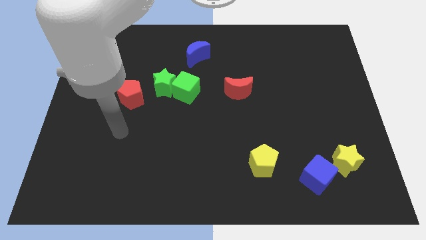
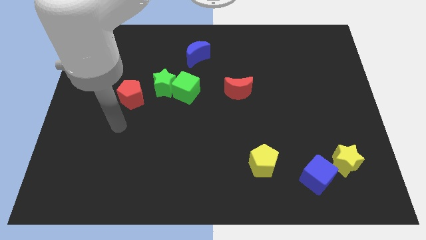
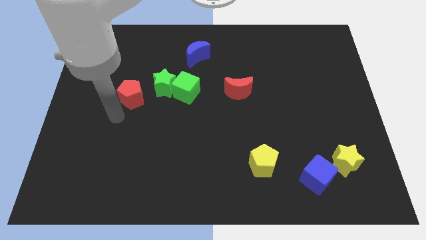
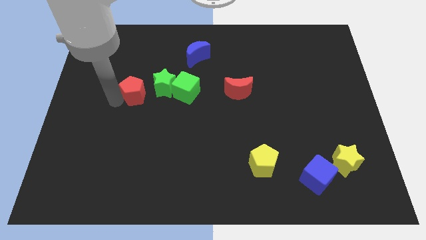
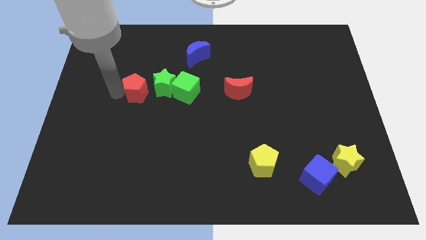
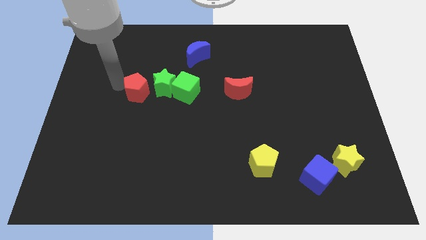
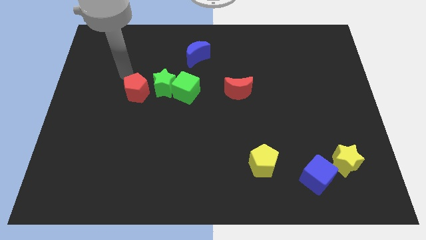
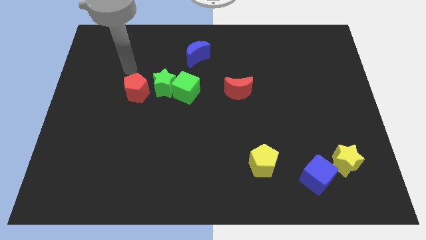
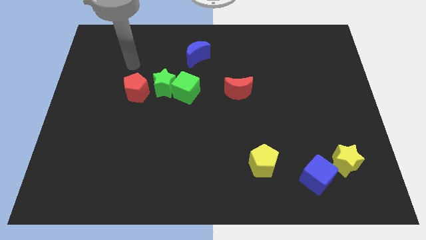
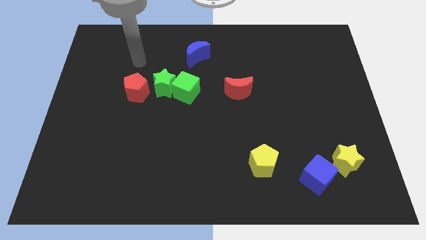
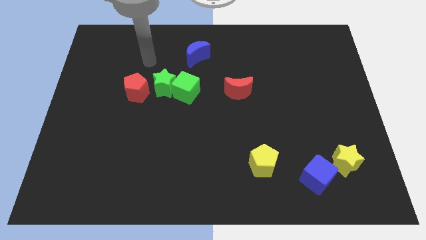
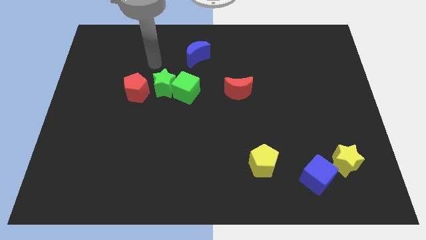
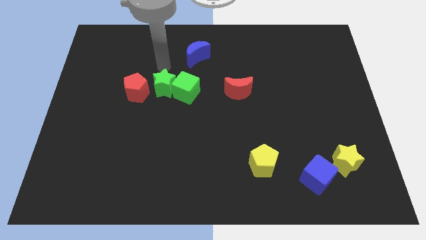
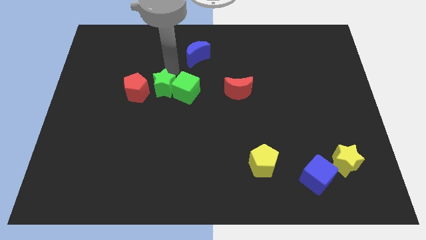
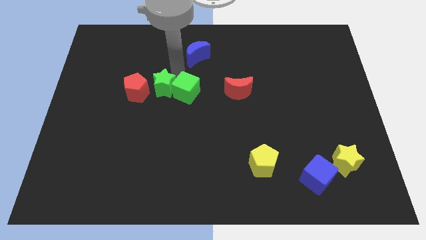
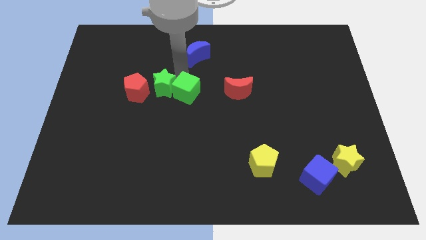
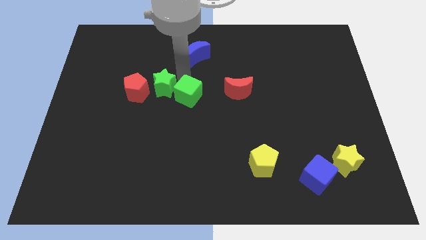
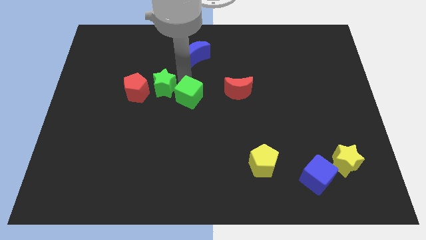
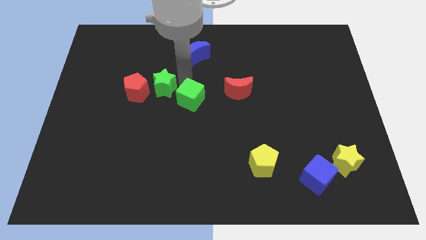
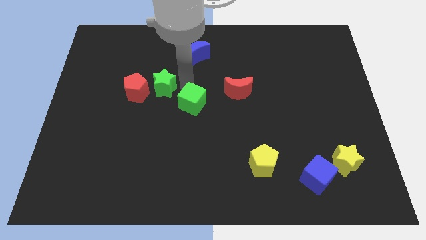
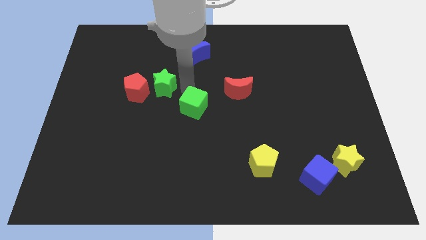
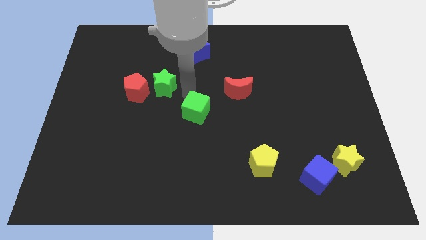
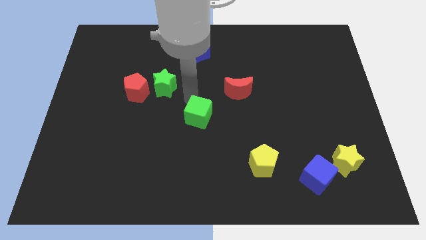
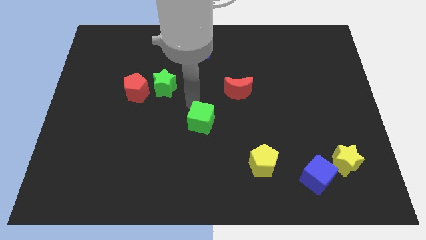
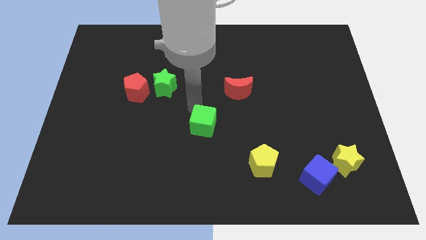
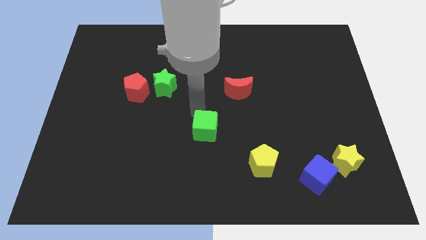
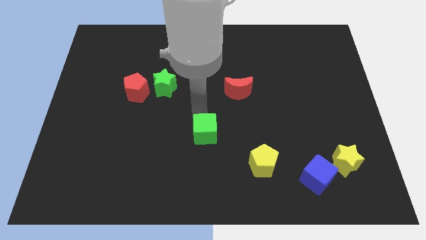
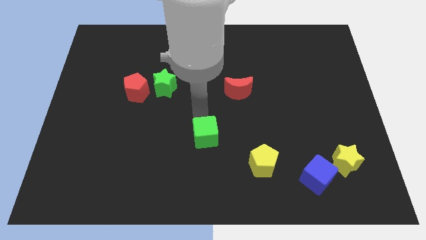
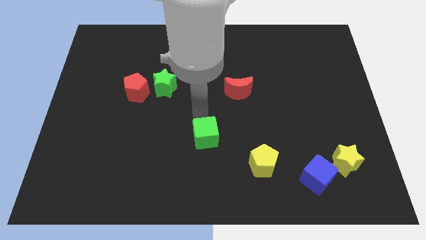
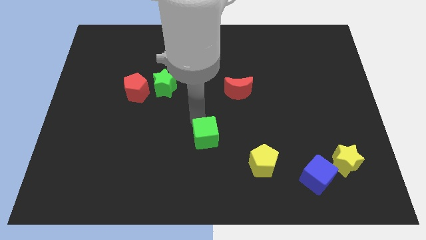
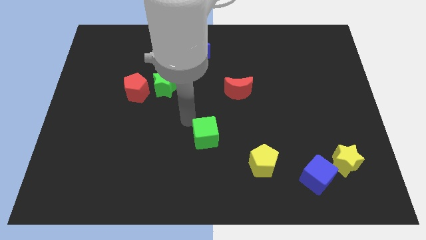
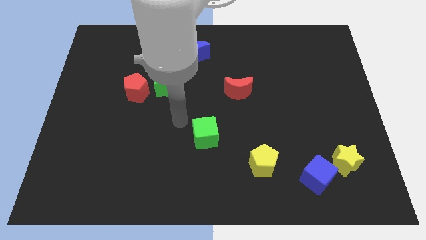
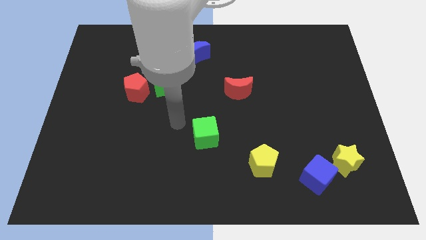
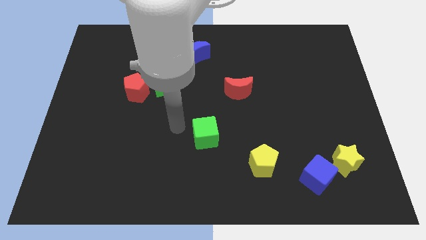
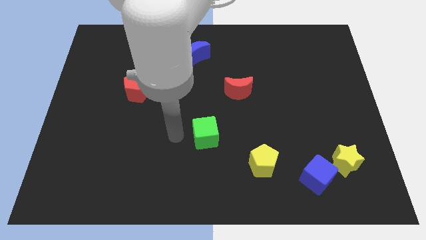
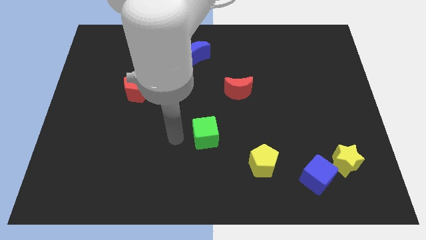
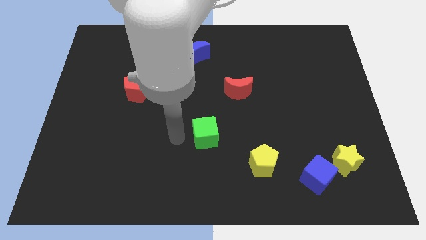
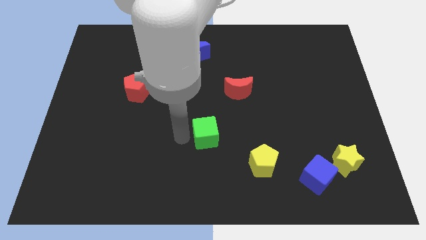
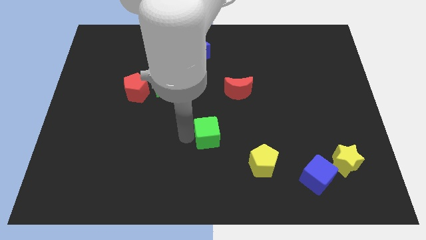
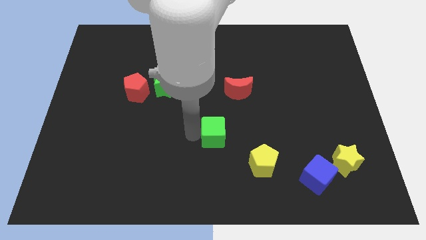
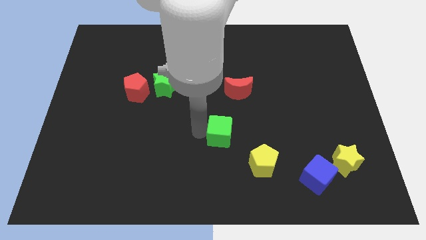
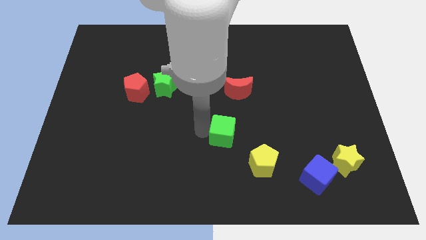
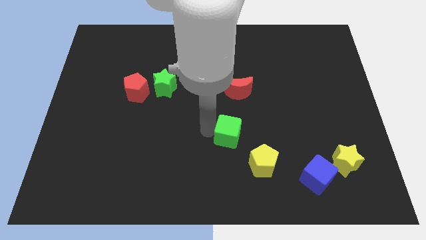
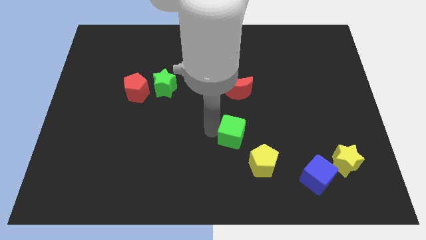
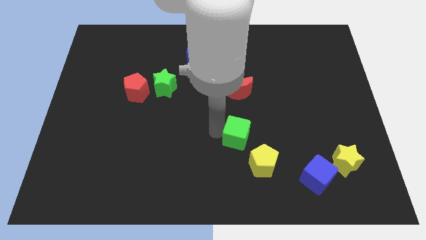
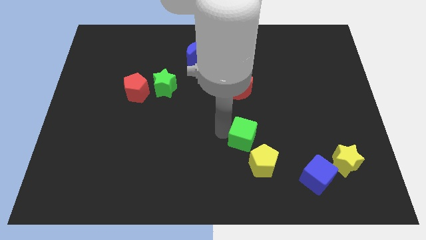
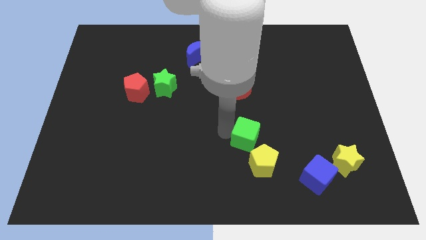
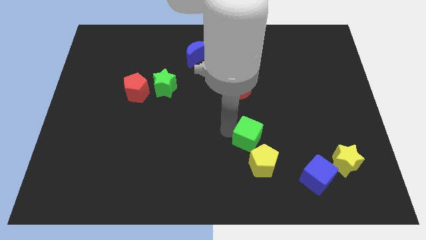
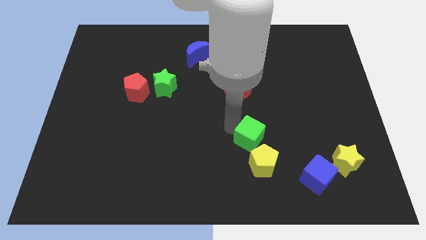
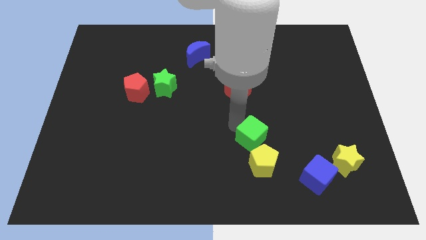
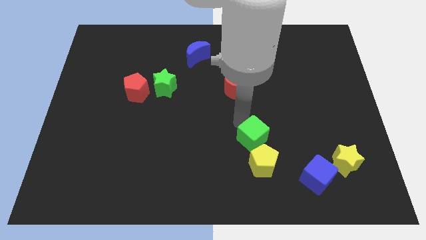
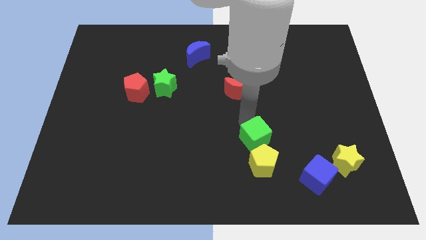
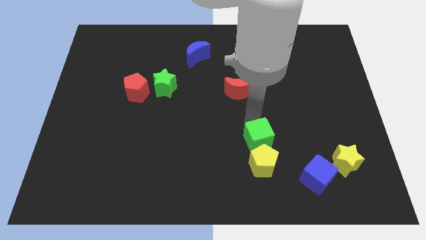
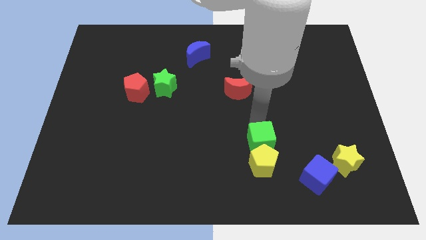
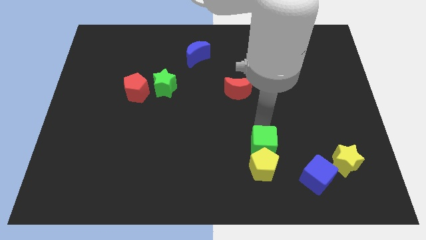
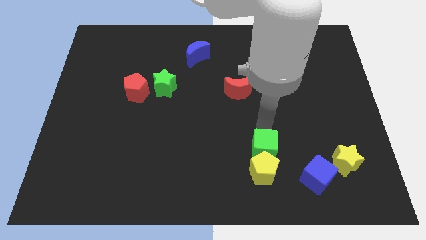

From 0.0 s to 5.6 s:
put the green cube towards the yellow pentagon

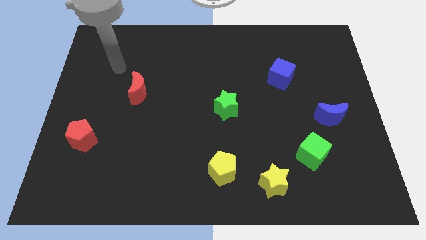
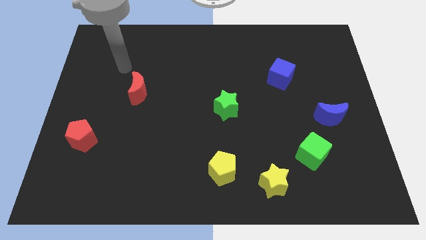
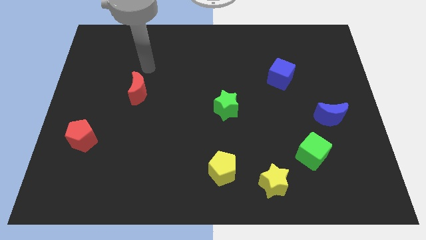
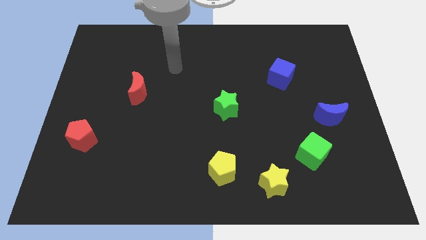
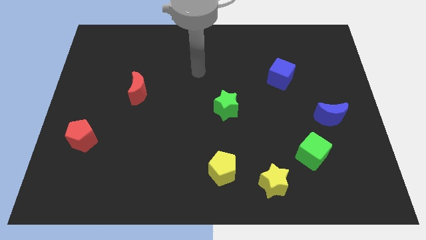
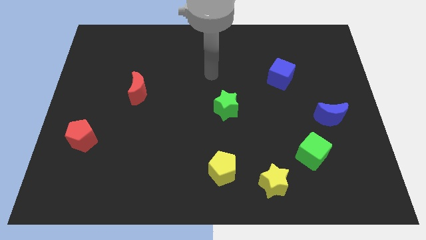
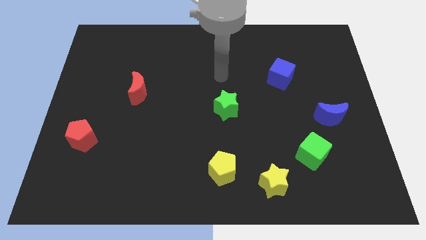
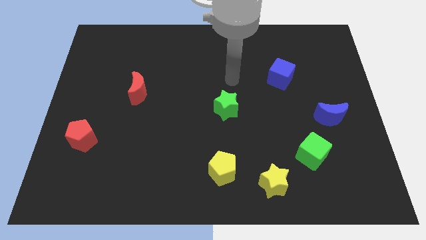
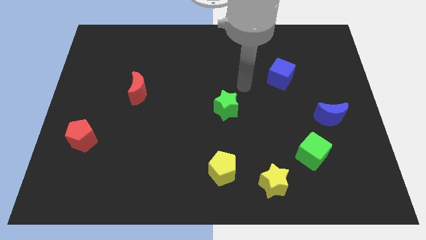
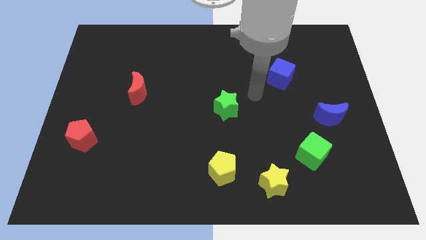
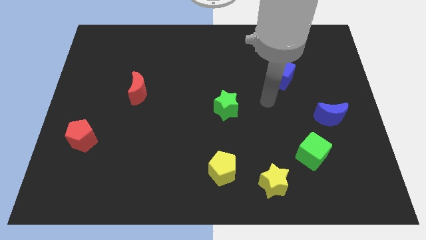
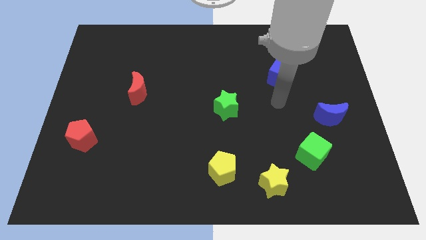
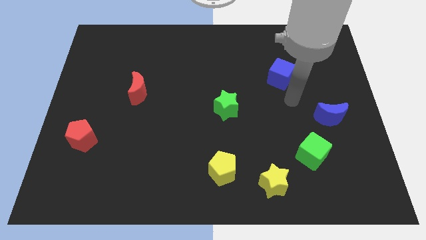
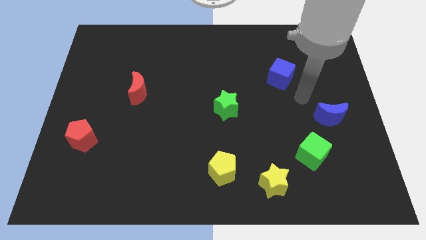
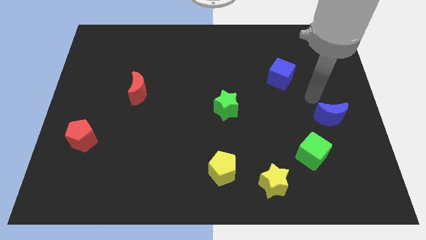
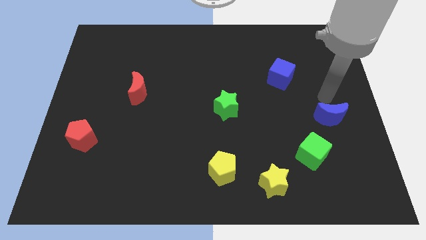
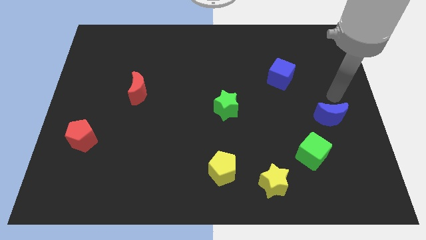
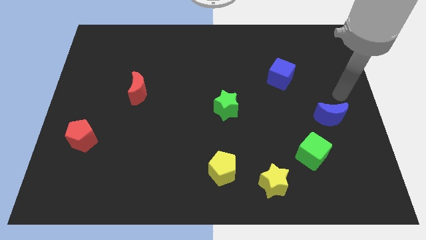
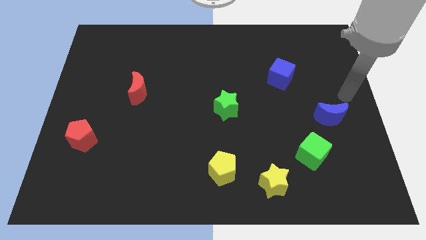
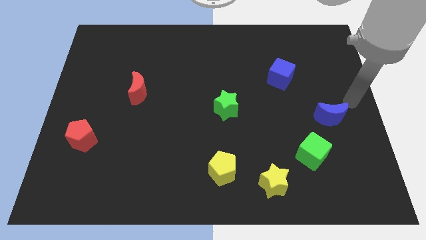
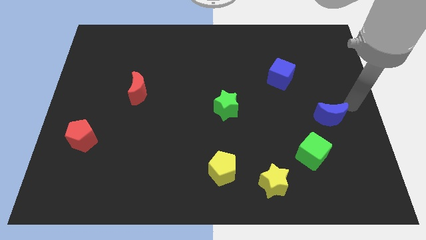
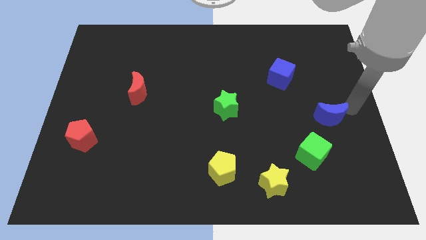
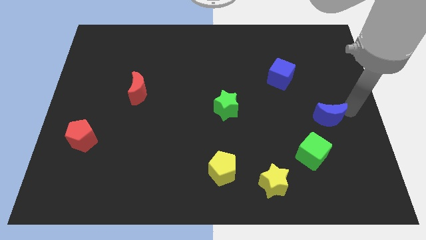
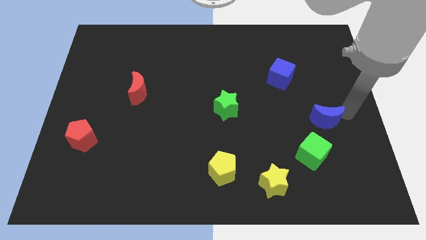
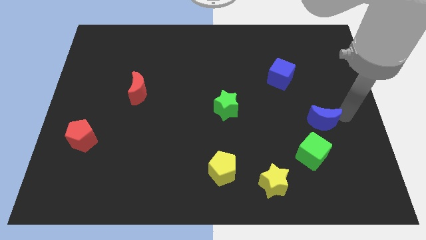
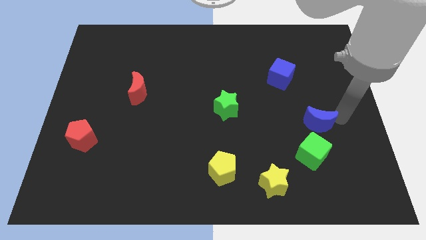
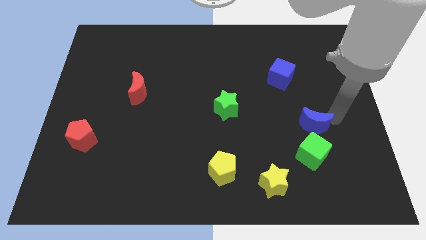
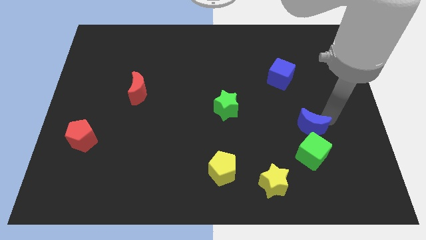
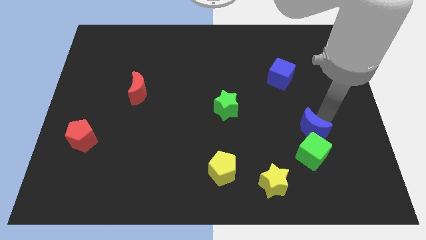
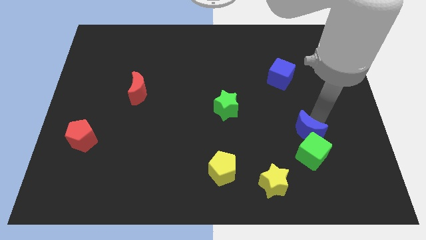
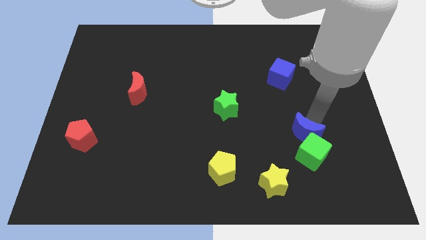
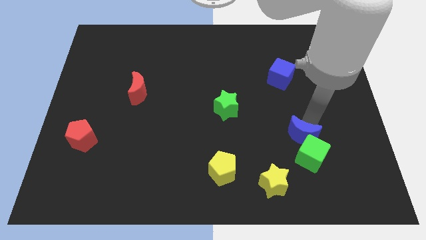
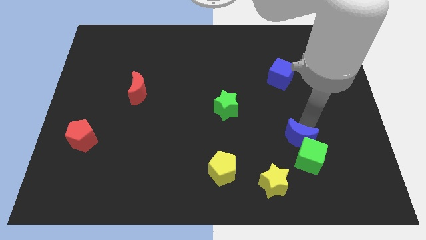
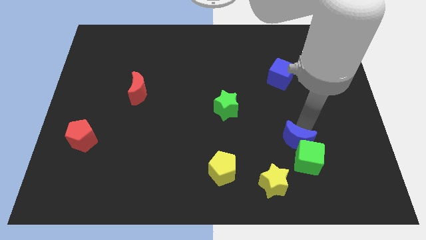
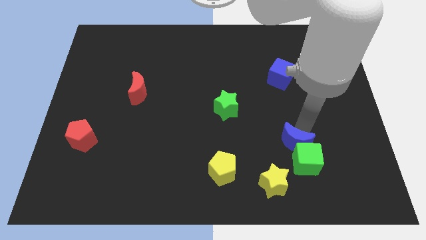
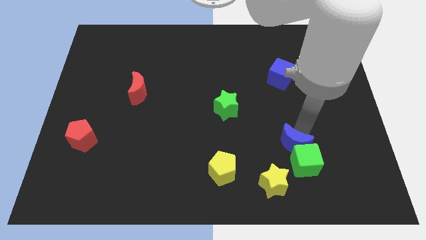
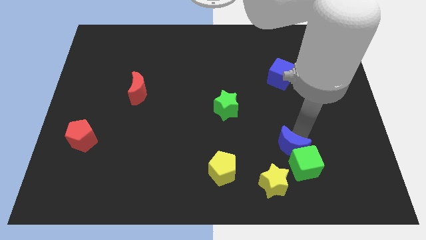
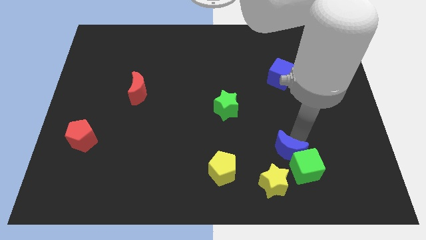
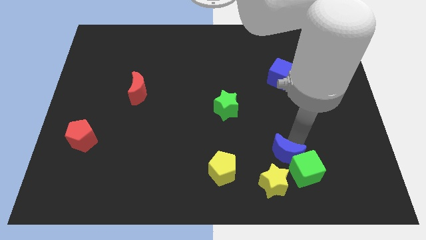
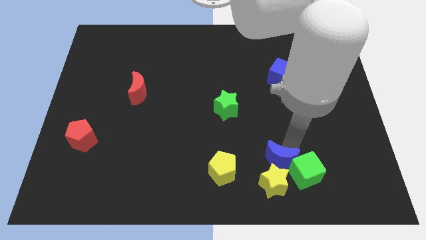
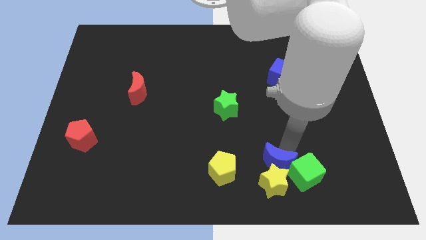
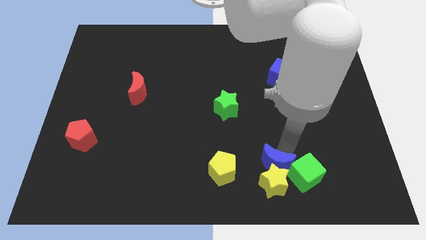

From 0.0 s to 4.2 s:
slide the blue moon to the yellow star
